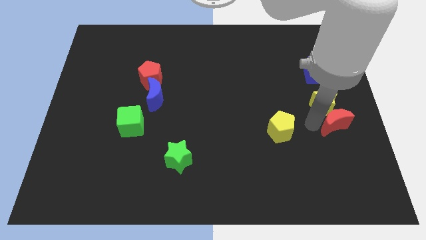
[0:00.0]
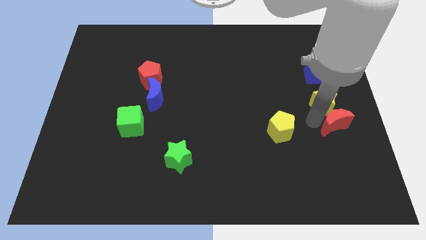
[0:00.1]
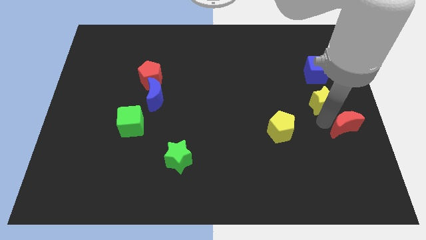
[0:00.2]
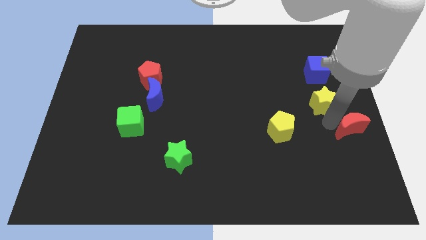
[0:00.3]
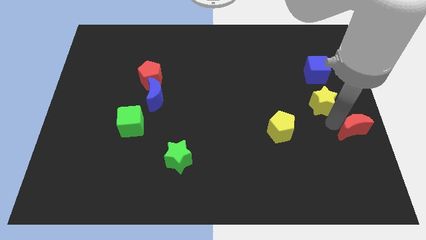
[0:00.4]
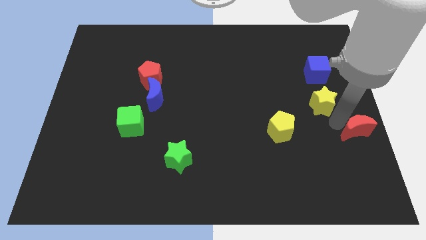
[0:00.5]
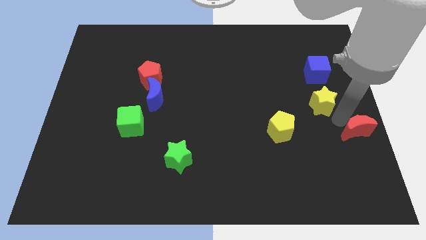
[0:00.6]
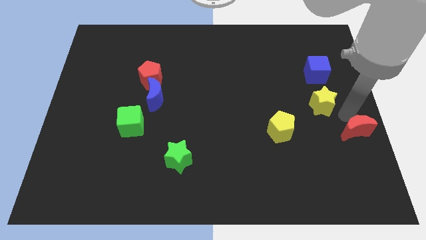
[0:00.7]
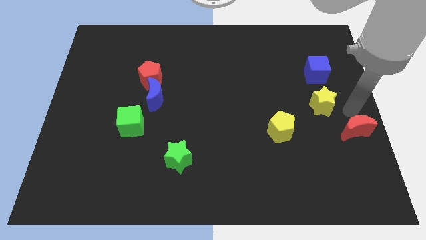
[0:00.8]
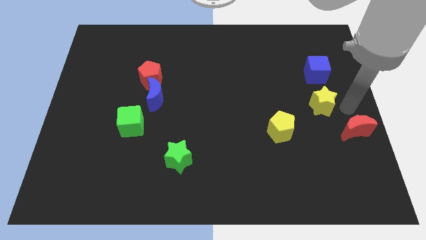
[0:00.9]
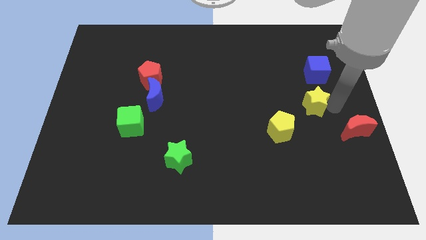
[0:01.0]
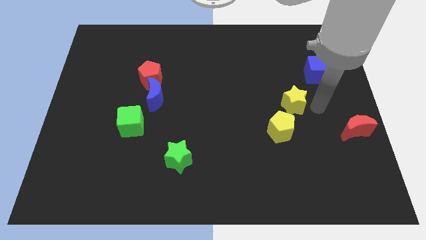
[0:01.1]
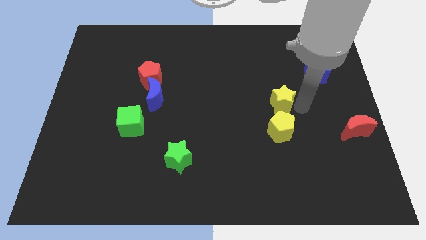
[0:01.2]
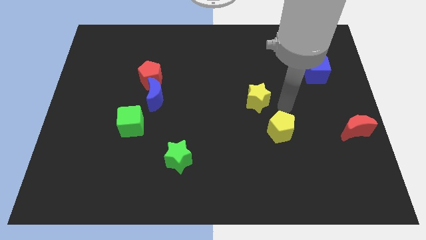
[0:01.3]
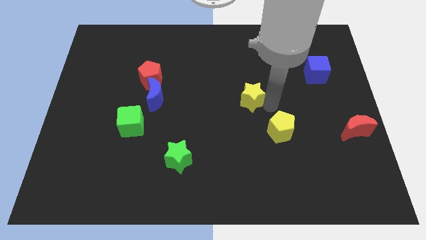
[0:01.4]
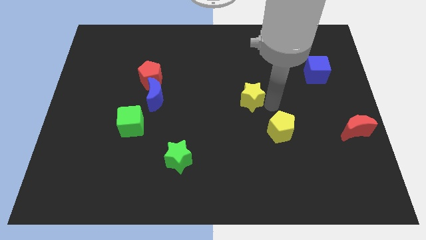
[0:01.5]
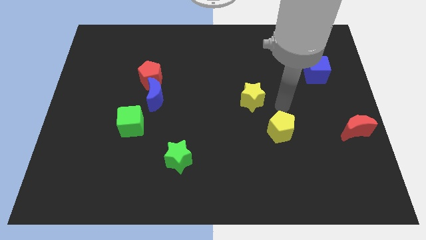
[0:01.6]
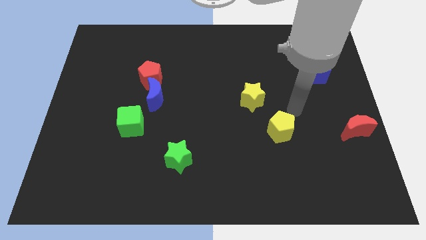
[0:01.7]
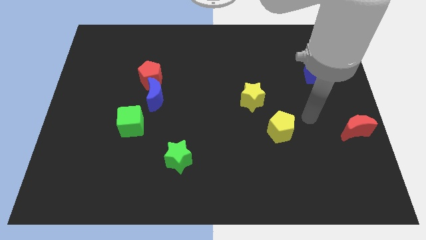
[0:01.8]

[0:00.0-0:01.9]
place your arm in between the yellow star and red moon

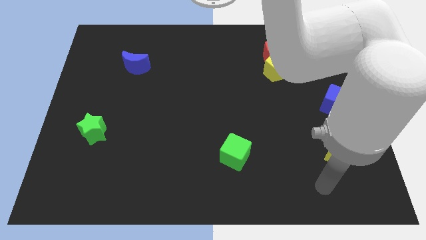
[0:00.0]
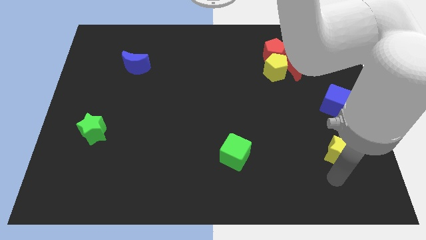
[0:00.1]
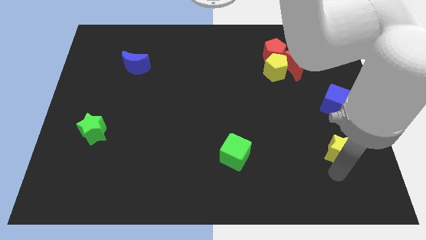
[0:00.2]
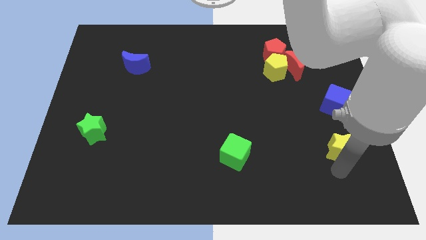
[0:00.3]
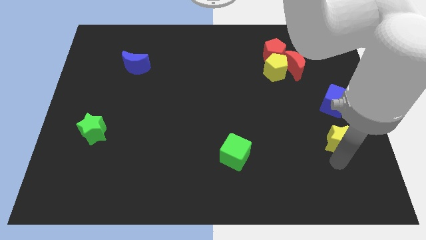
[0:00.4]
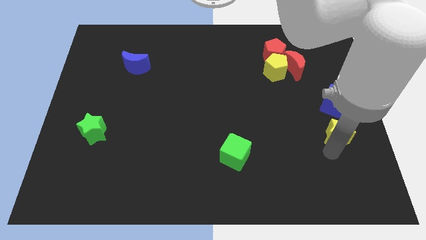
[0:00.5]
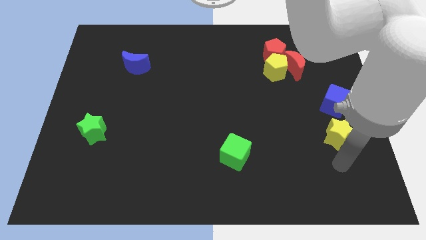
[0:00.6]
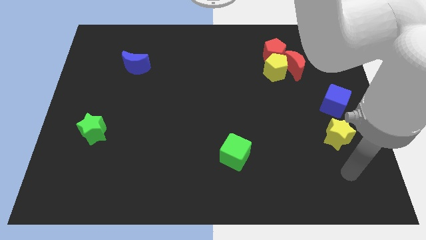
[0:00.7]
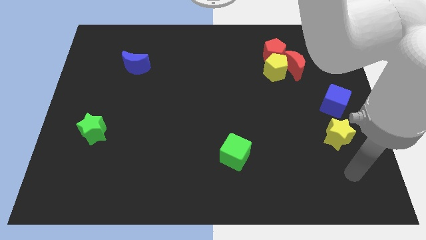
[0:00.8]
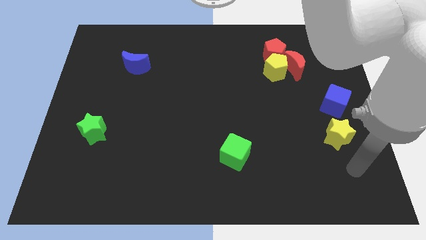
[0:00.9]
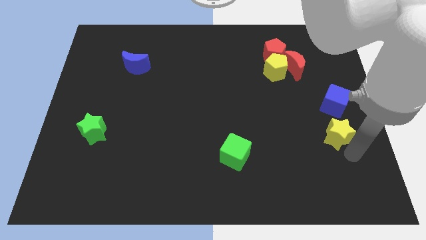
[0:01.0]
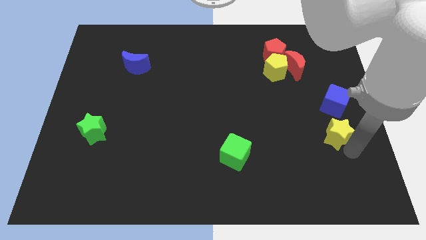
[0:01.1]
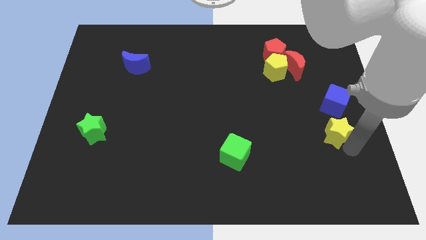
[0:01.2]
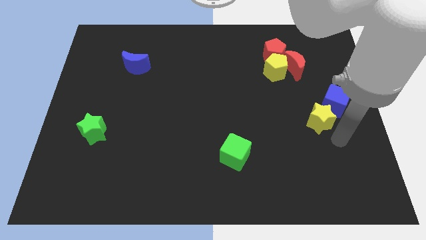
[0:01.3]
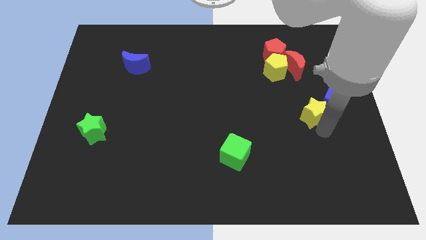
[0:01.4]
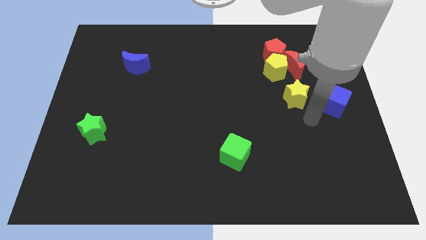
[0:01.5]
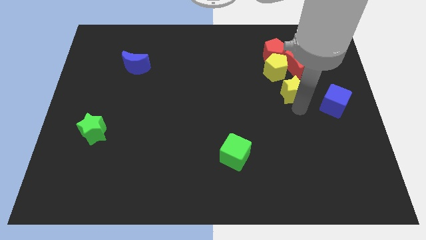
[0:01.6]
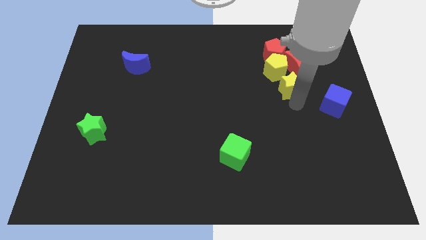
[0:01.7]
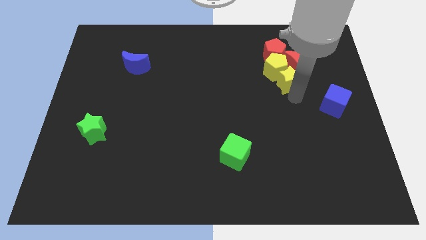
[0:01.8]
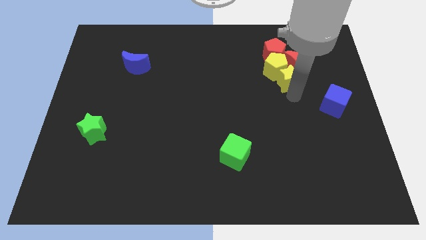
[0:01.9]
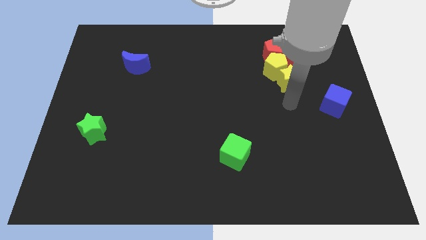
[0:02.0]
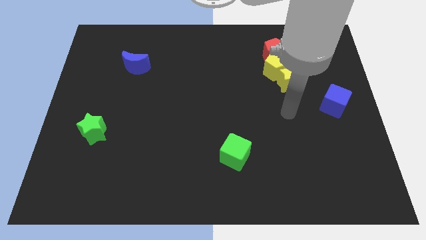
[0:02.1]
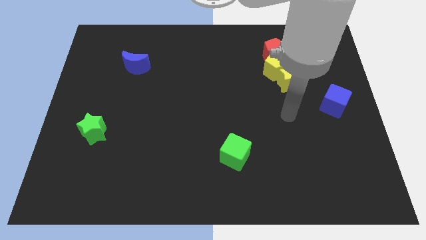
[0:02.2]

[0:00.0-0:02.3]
move the yellow star below the yellow pentagon

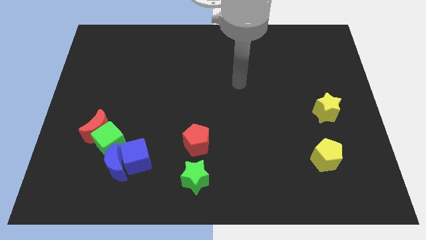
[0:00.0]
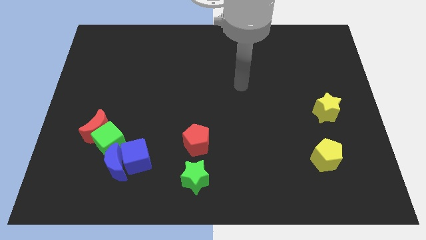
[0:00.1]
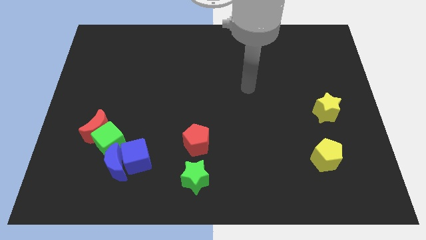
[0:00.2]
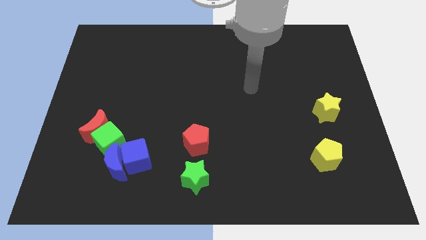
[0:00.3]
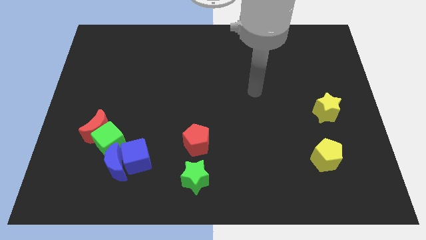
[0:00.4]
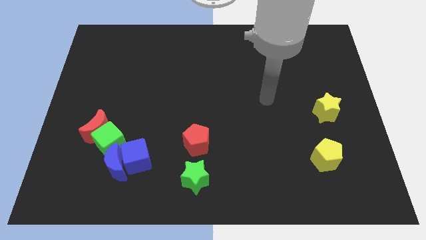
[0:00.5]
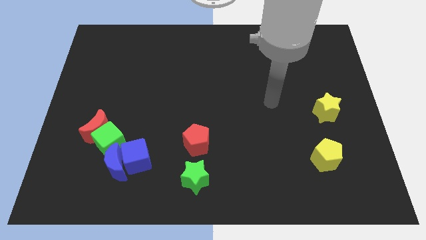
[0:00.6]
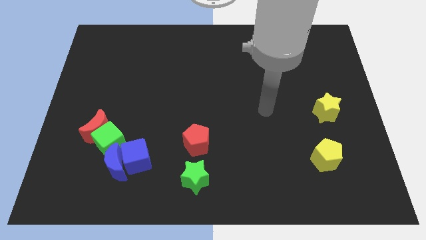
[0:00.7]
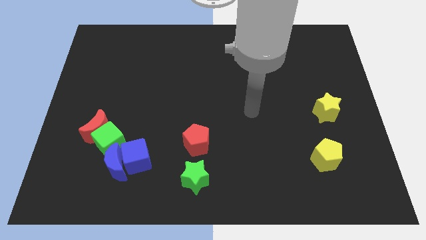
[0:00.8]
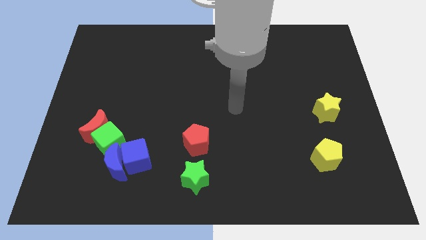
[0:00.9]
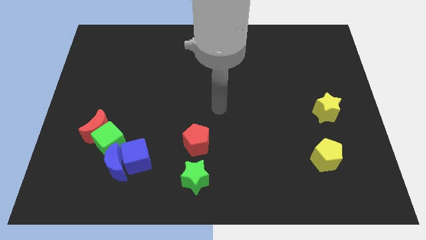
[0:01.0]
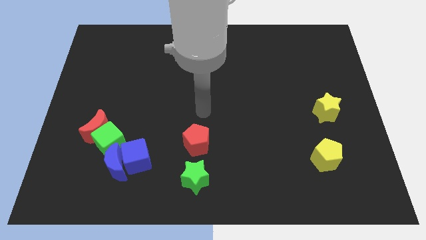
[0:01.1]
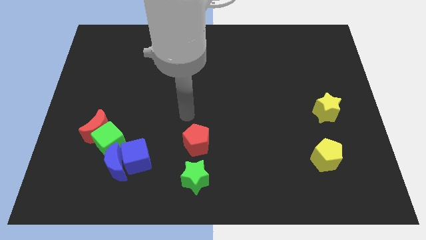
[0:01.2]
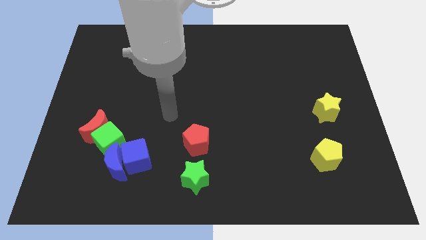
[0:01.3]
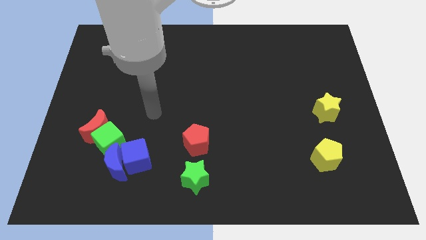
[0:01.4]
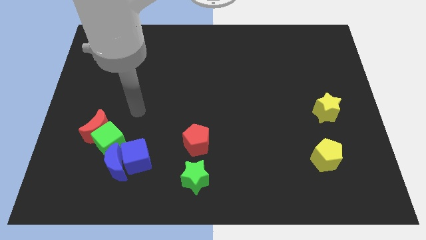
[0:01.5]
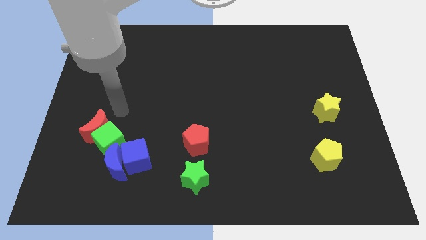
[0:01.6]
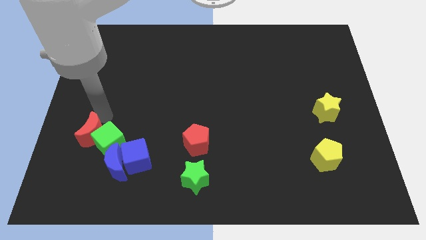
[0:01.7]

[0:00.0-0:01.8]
point your arm diagonal above the red moon

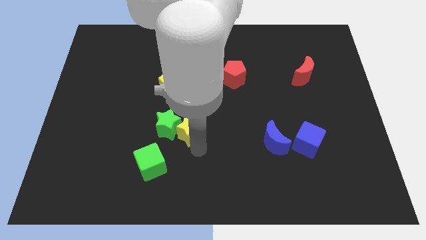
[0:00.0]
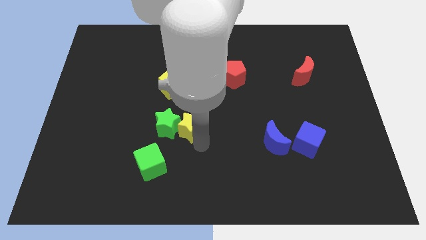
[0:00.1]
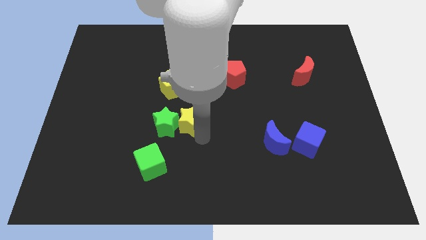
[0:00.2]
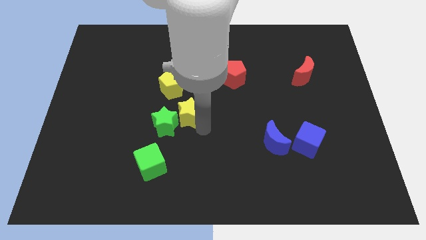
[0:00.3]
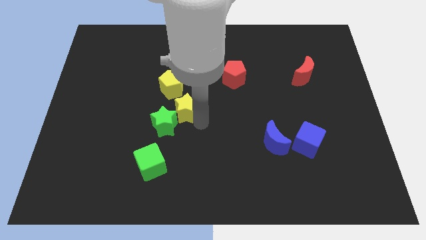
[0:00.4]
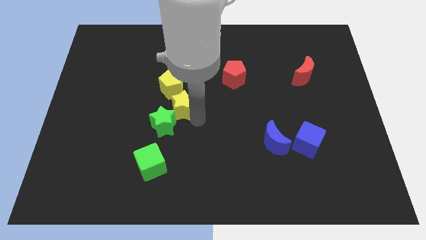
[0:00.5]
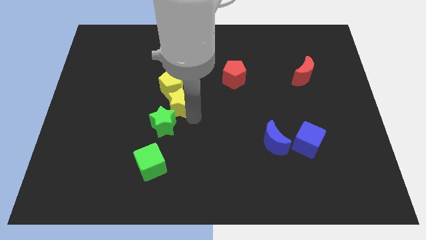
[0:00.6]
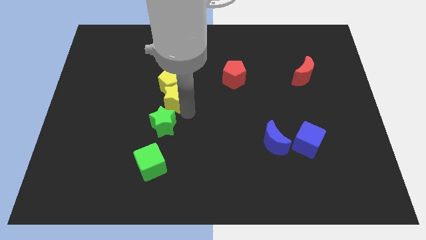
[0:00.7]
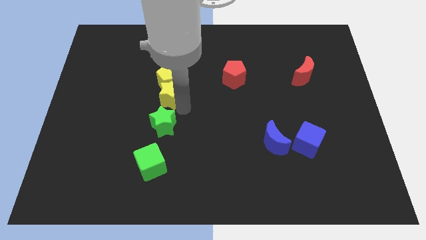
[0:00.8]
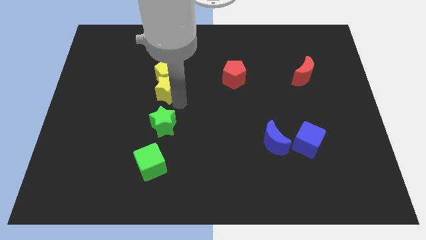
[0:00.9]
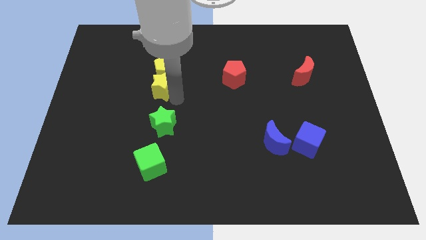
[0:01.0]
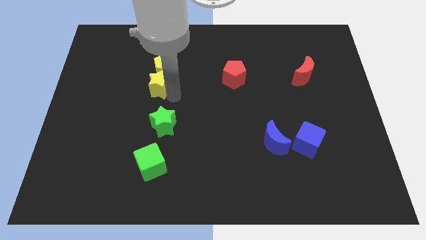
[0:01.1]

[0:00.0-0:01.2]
move the yellow star vertically below the yellow pentagon

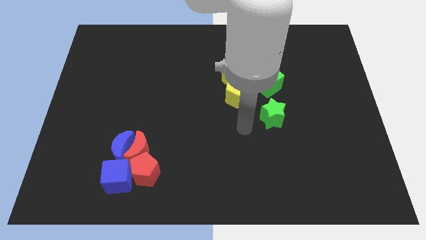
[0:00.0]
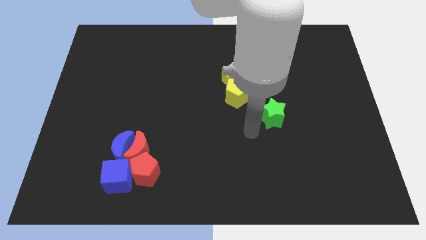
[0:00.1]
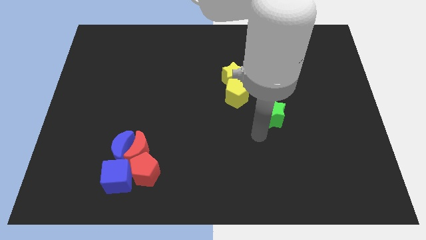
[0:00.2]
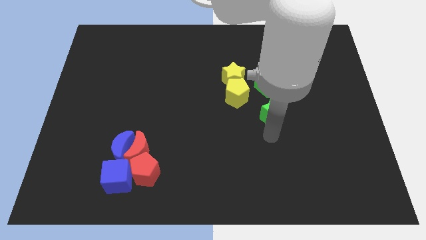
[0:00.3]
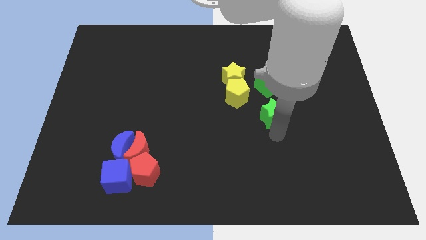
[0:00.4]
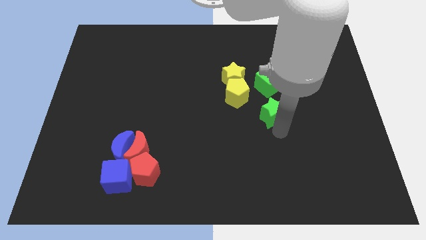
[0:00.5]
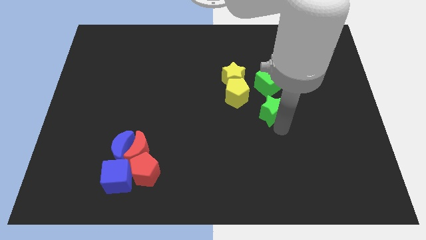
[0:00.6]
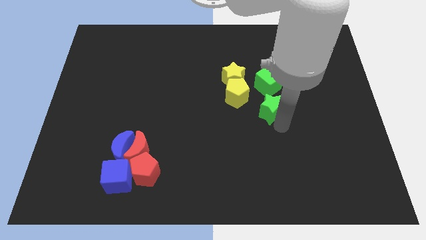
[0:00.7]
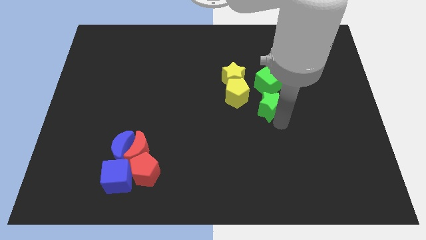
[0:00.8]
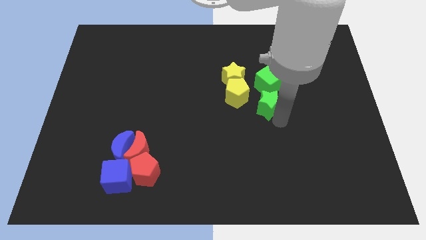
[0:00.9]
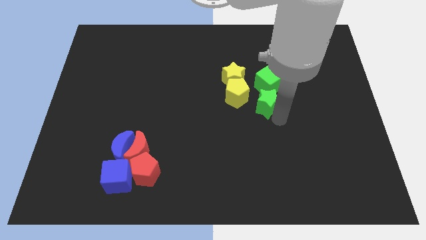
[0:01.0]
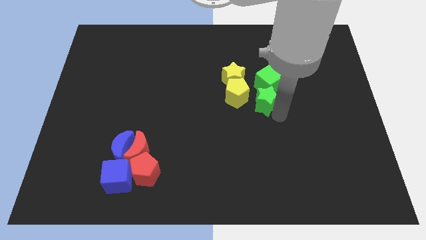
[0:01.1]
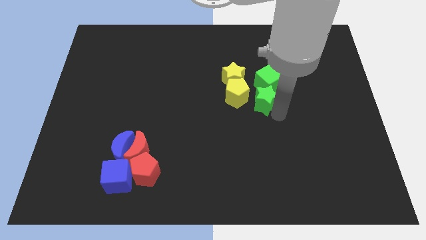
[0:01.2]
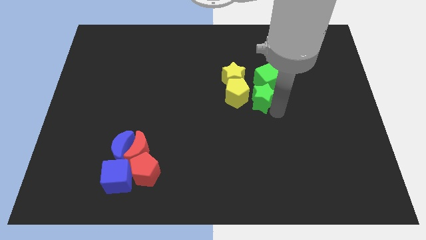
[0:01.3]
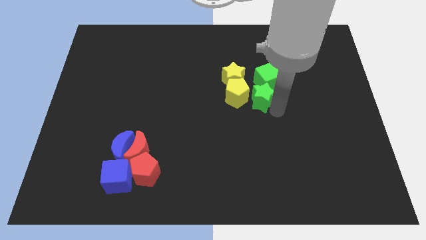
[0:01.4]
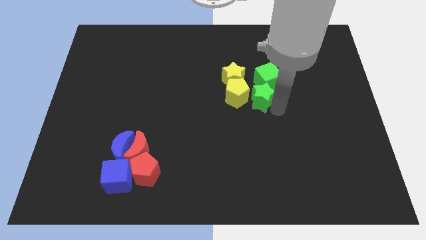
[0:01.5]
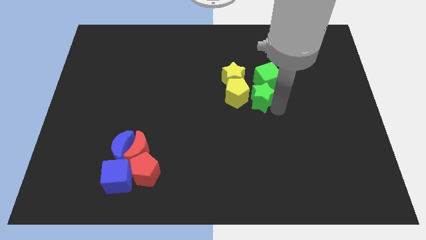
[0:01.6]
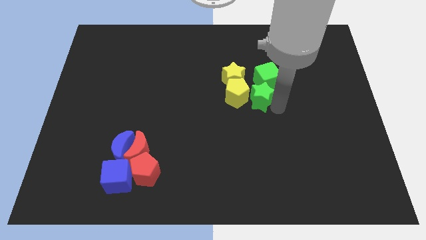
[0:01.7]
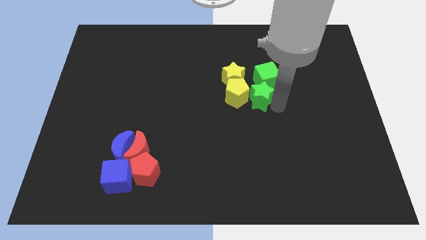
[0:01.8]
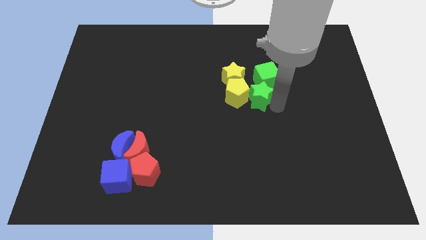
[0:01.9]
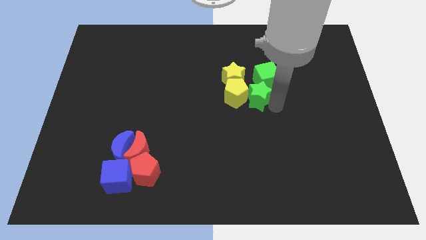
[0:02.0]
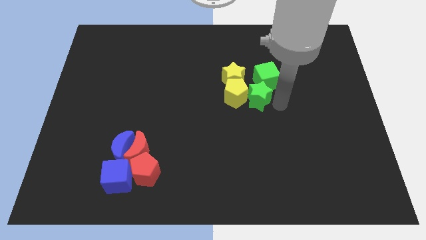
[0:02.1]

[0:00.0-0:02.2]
slightly move the green star into the right of the yellow pentagon
